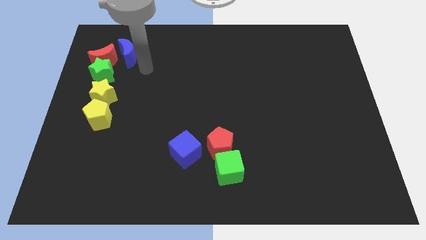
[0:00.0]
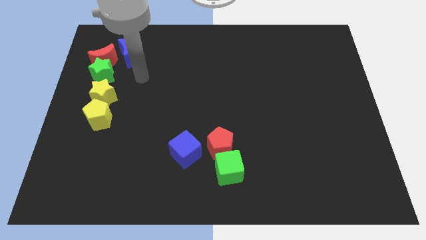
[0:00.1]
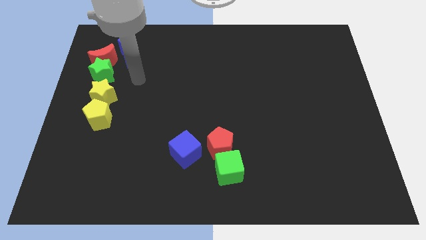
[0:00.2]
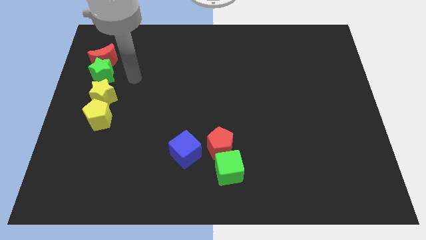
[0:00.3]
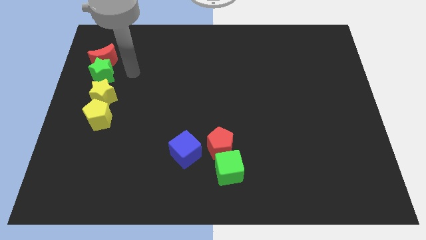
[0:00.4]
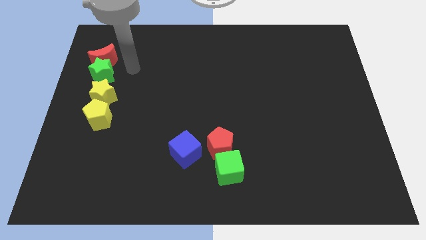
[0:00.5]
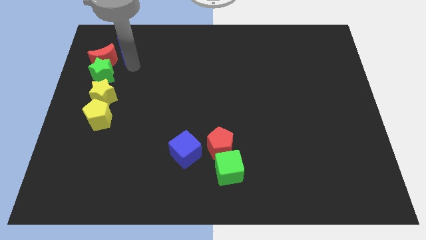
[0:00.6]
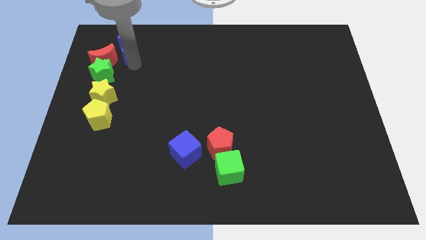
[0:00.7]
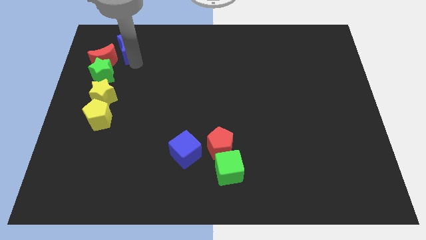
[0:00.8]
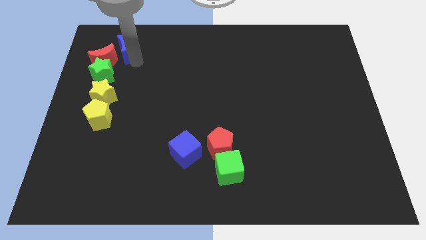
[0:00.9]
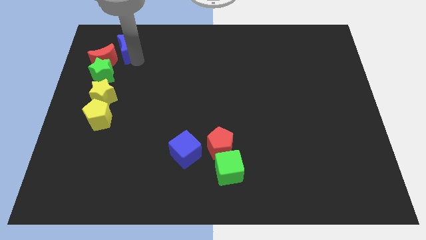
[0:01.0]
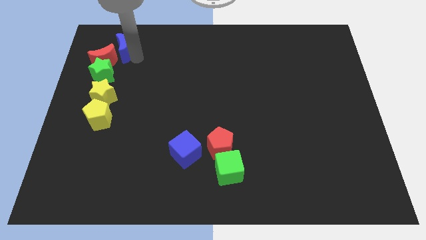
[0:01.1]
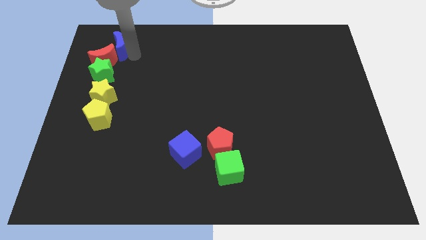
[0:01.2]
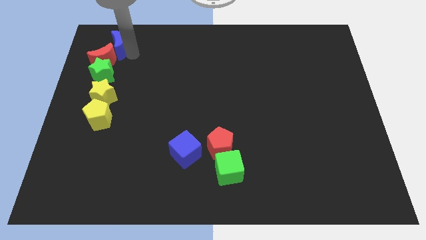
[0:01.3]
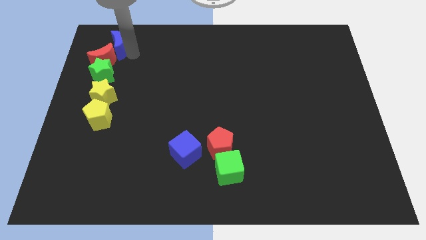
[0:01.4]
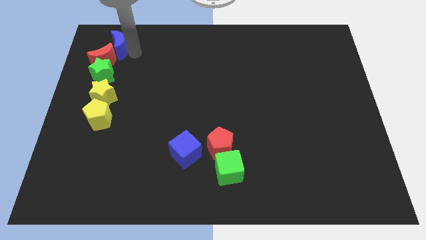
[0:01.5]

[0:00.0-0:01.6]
make the blue moon touch the red moon

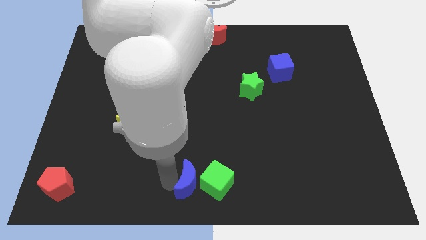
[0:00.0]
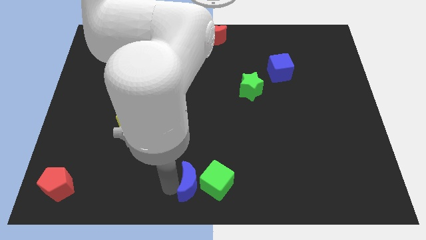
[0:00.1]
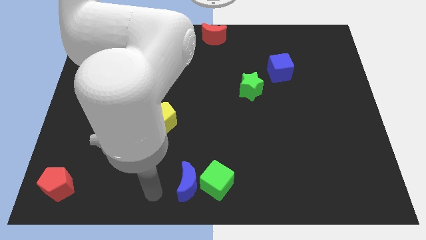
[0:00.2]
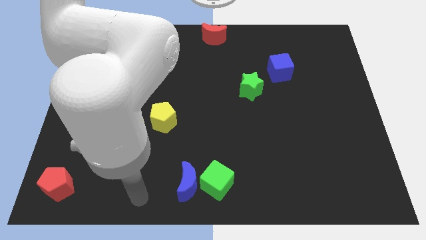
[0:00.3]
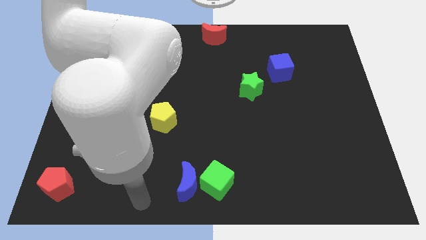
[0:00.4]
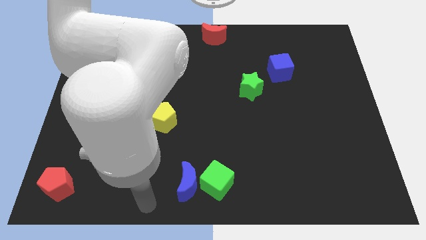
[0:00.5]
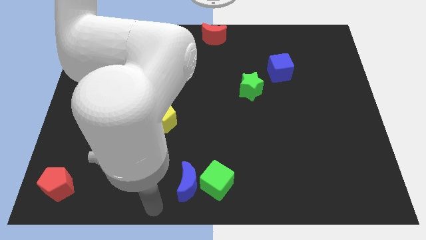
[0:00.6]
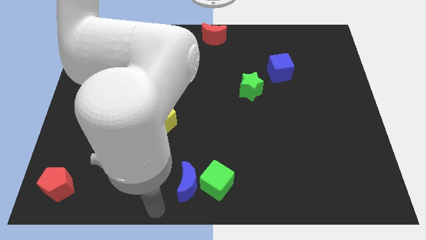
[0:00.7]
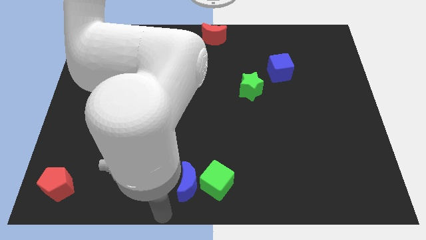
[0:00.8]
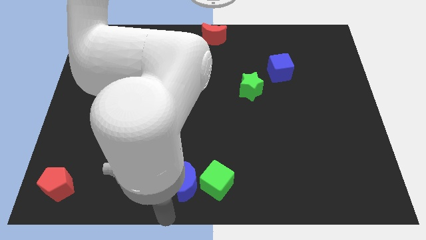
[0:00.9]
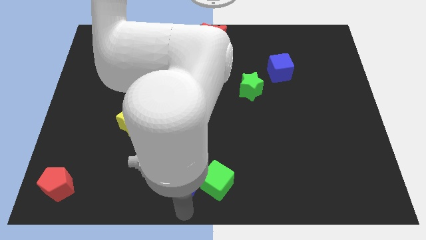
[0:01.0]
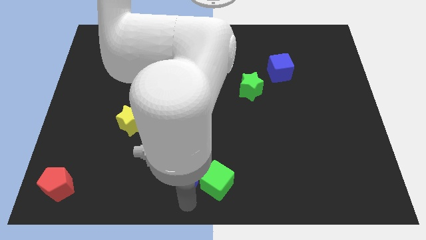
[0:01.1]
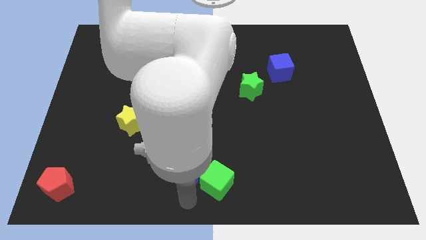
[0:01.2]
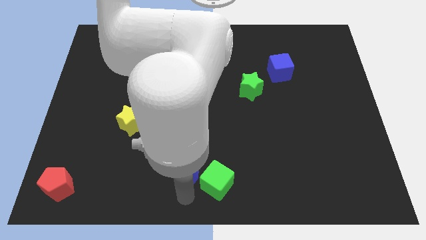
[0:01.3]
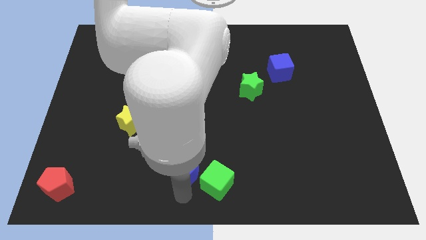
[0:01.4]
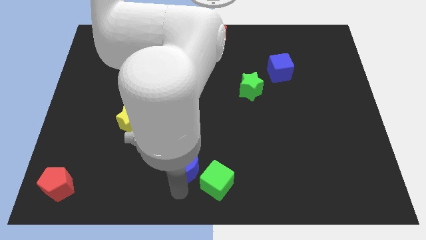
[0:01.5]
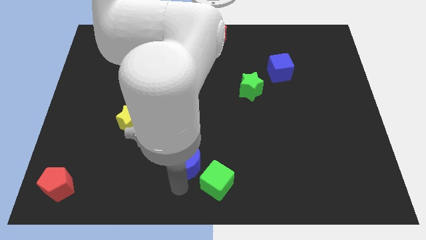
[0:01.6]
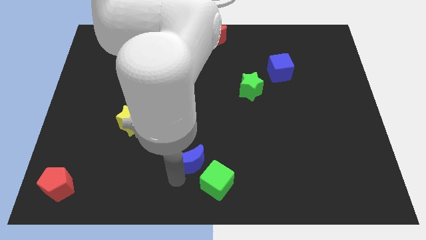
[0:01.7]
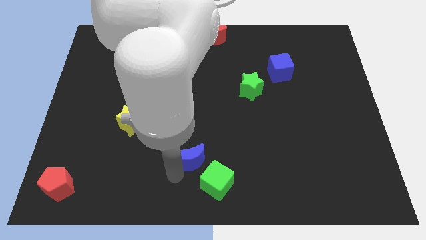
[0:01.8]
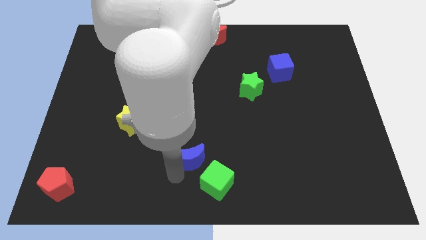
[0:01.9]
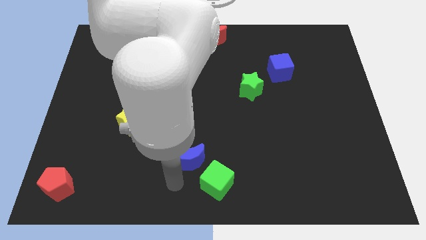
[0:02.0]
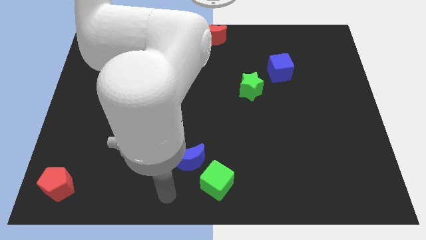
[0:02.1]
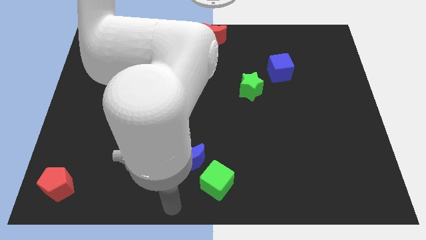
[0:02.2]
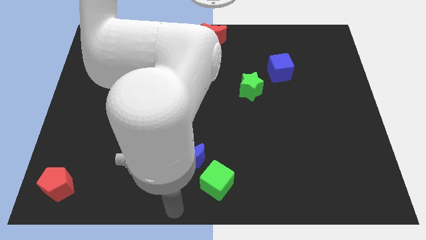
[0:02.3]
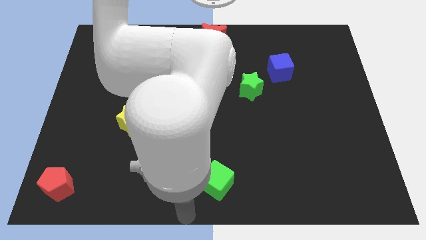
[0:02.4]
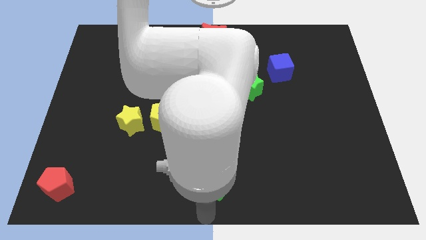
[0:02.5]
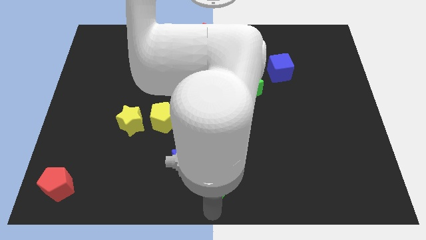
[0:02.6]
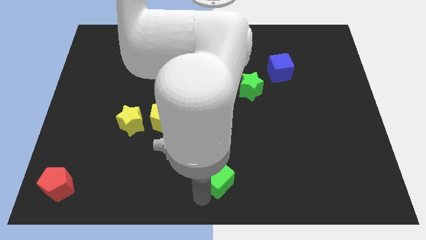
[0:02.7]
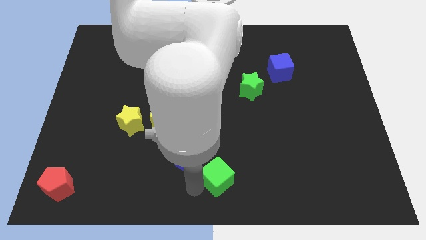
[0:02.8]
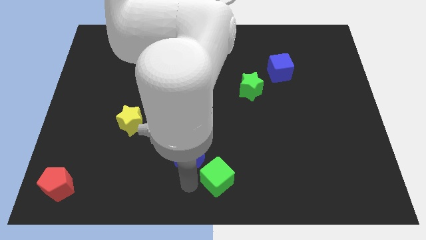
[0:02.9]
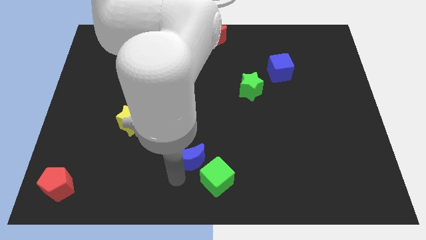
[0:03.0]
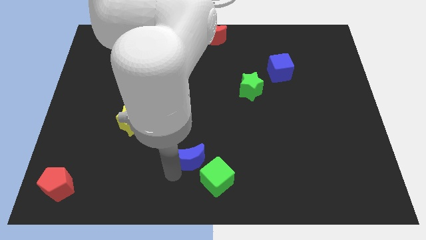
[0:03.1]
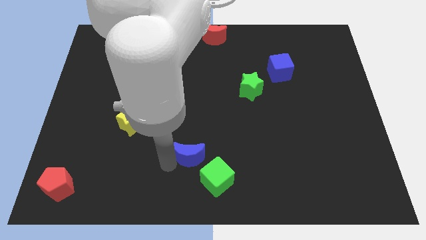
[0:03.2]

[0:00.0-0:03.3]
adjust the blue moon in between the yellow pentagon and the green cube

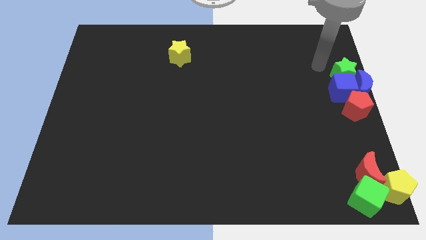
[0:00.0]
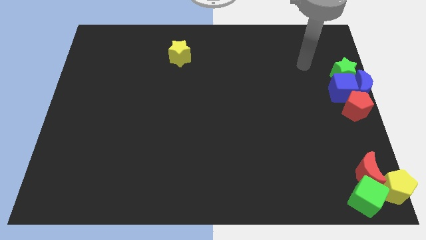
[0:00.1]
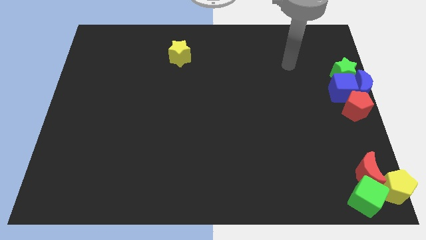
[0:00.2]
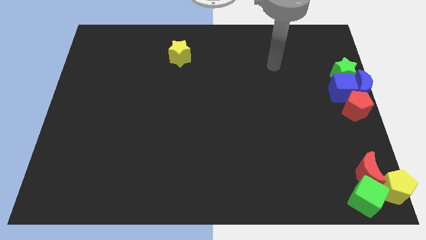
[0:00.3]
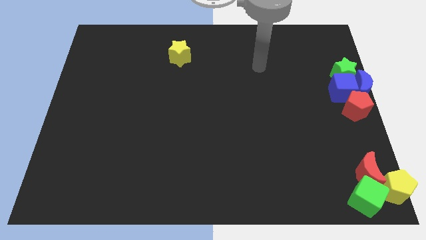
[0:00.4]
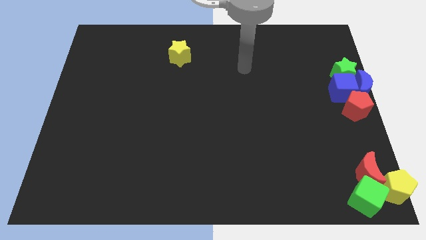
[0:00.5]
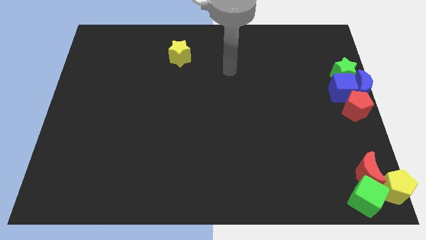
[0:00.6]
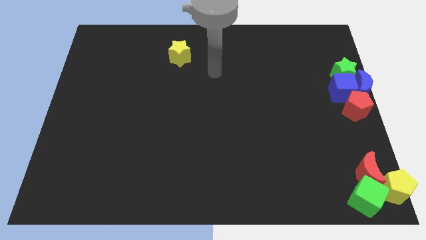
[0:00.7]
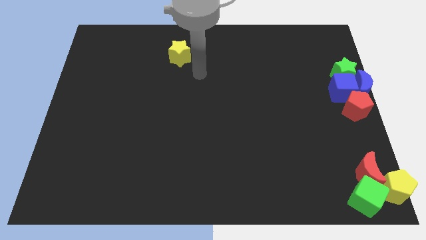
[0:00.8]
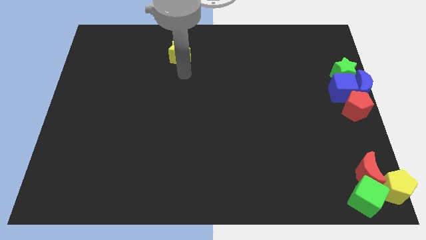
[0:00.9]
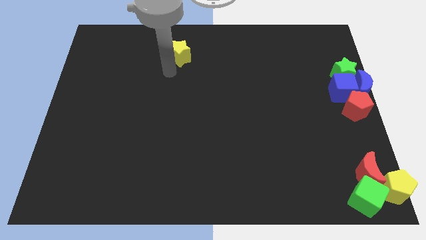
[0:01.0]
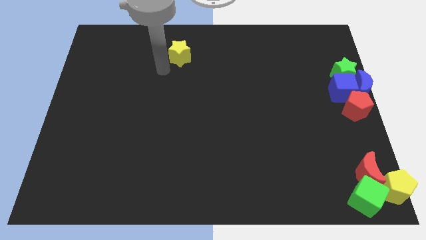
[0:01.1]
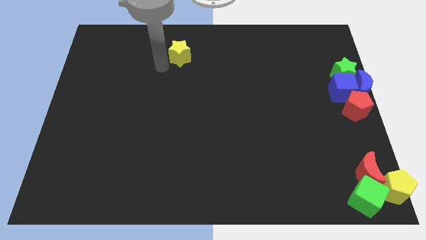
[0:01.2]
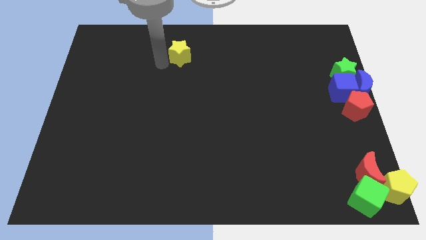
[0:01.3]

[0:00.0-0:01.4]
move your arm towards the yellow star

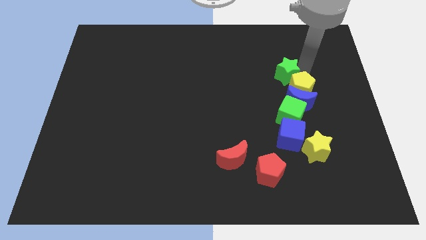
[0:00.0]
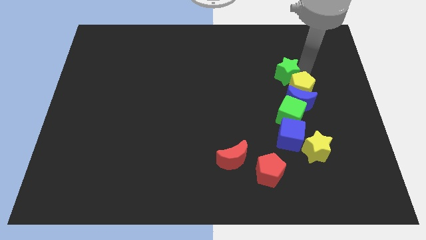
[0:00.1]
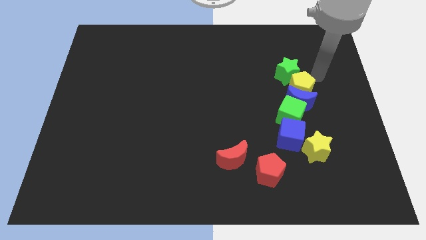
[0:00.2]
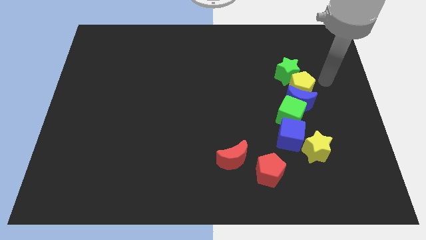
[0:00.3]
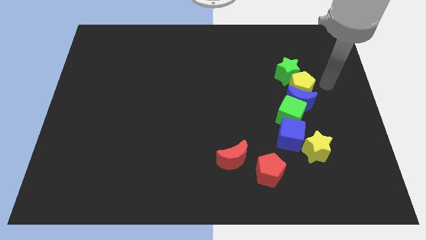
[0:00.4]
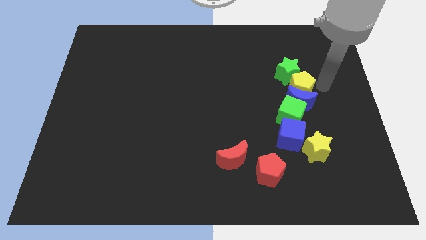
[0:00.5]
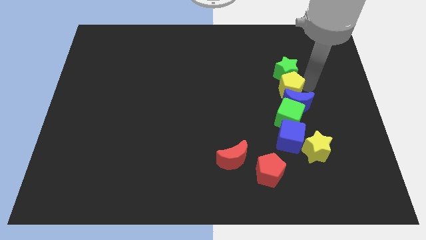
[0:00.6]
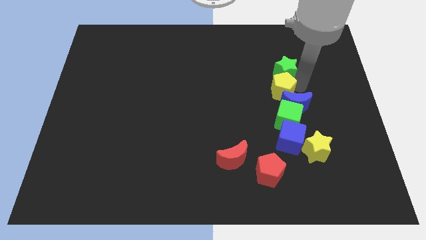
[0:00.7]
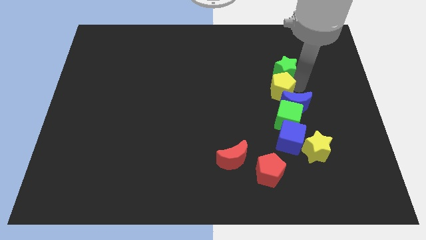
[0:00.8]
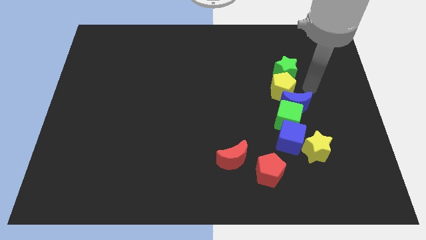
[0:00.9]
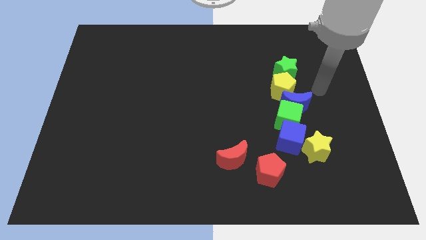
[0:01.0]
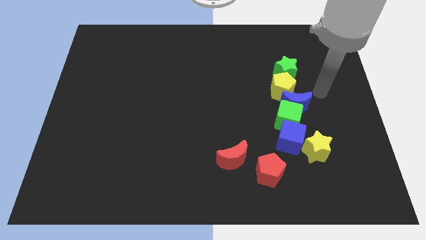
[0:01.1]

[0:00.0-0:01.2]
place yellow pentagon below green star

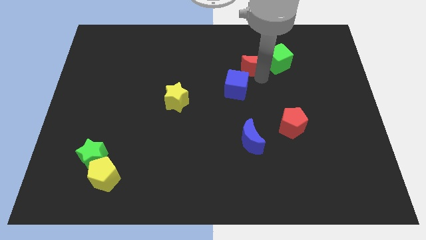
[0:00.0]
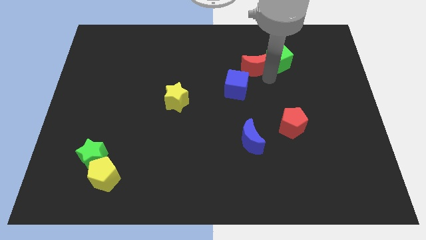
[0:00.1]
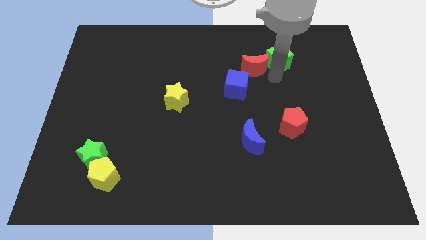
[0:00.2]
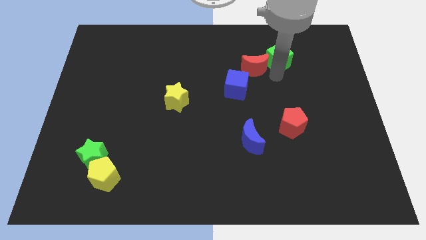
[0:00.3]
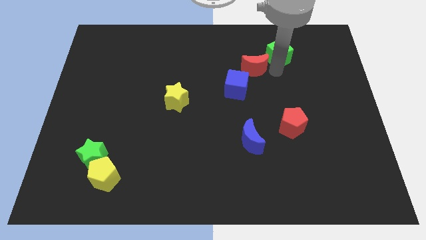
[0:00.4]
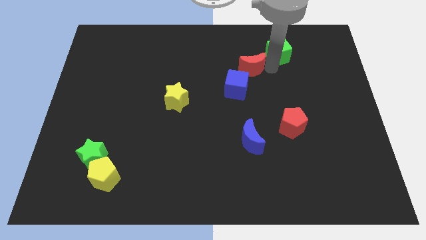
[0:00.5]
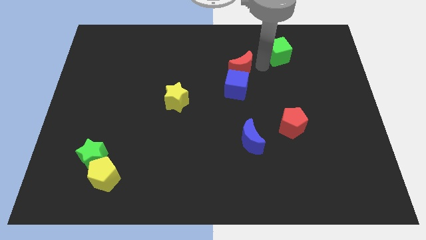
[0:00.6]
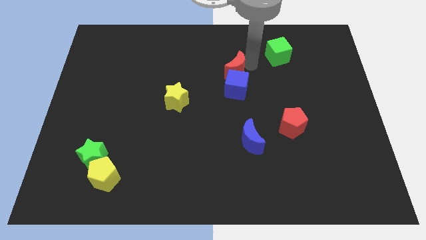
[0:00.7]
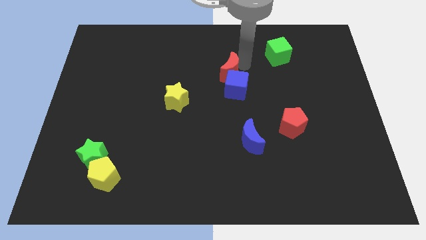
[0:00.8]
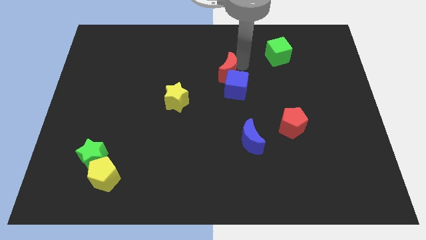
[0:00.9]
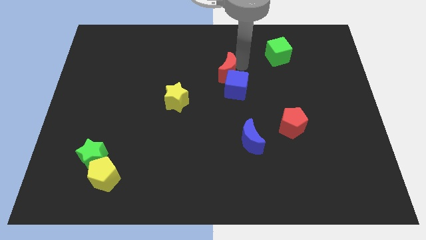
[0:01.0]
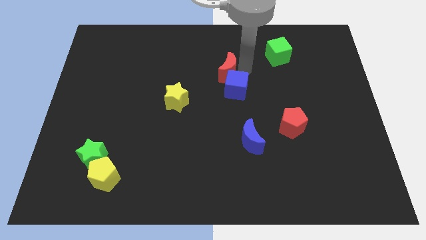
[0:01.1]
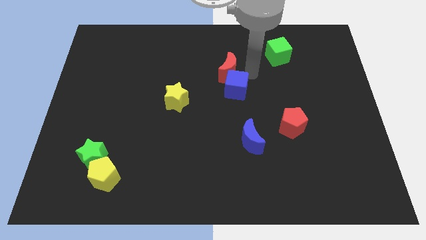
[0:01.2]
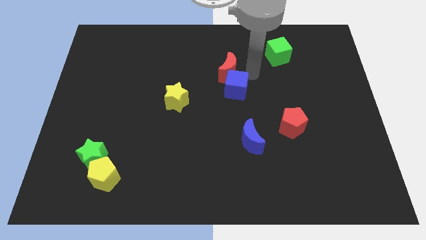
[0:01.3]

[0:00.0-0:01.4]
separate the red moon from the green cube

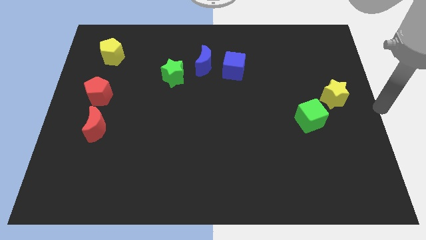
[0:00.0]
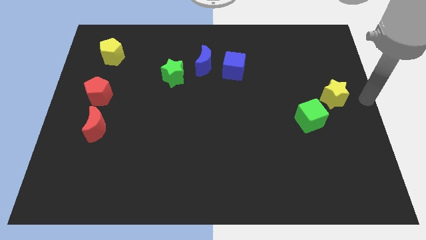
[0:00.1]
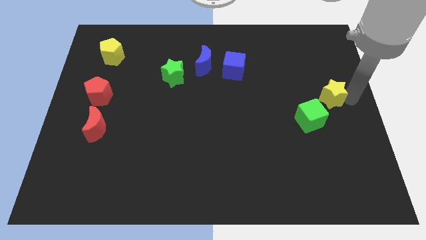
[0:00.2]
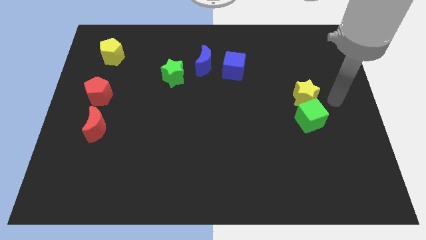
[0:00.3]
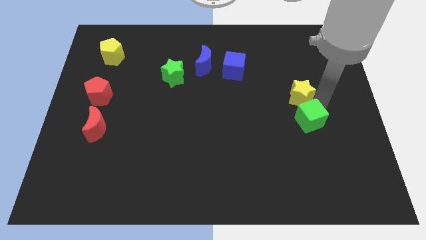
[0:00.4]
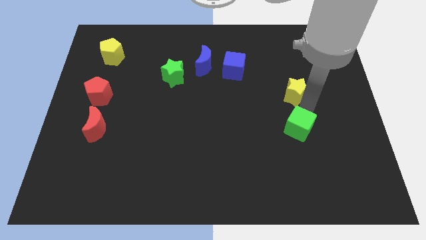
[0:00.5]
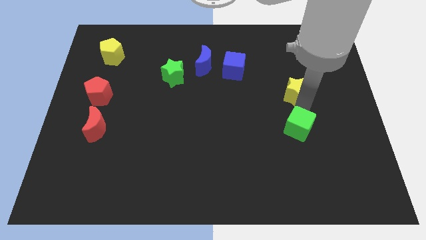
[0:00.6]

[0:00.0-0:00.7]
place the yellow star at the top of green cube
